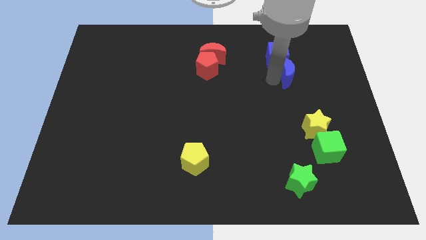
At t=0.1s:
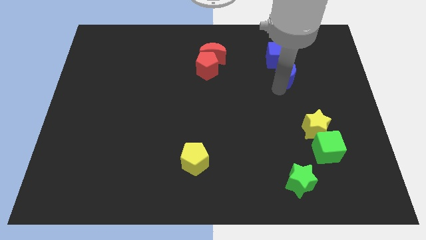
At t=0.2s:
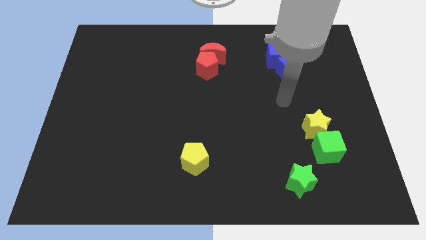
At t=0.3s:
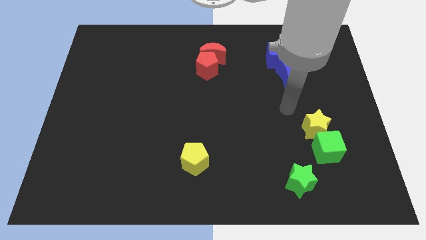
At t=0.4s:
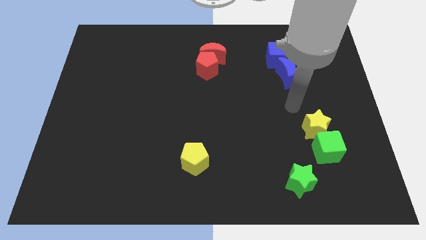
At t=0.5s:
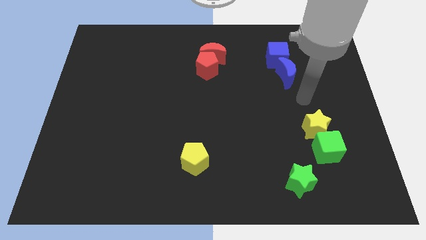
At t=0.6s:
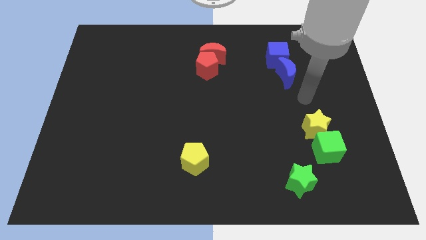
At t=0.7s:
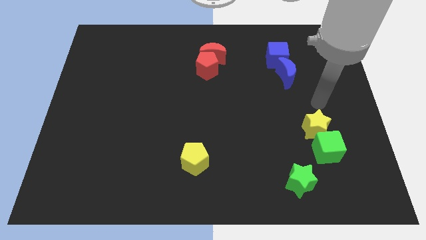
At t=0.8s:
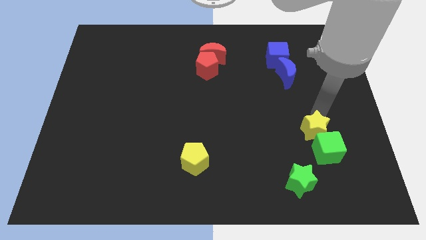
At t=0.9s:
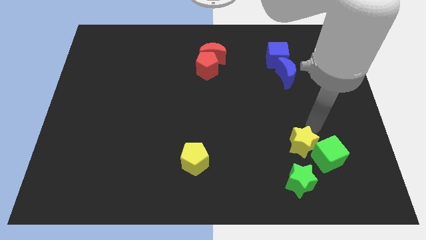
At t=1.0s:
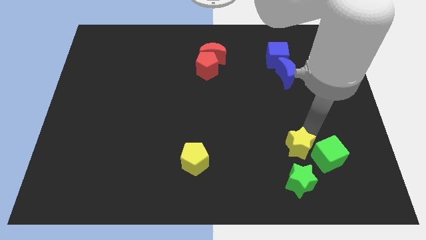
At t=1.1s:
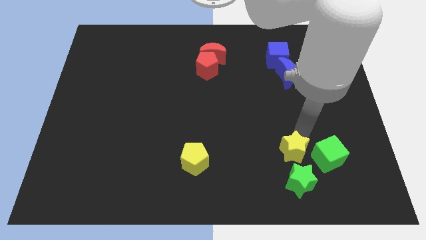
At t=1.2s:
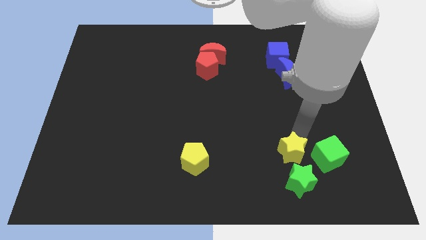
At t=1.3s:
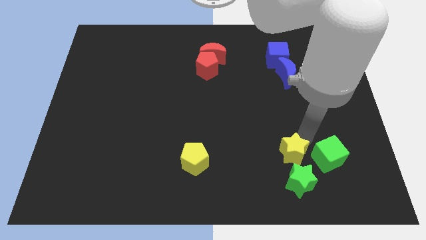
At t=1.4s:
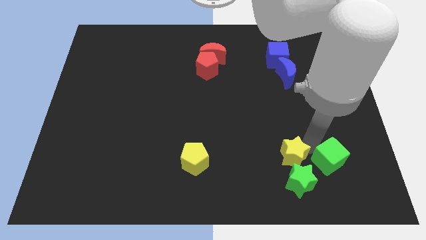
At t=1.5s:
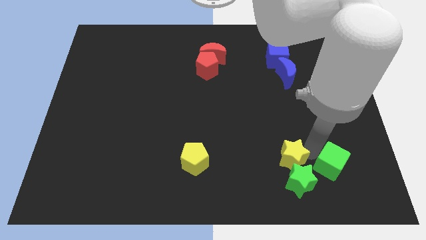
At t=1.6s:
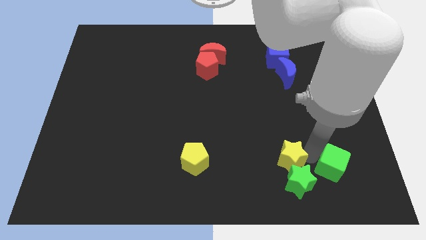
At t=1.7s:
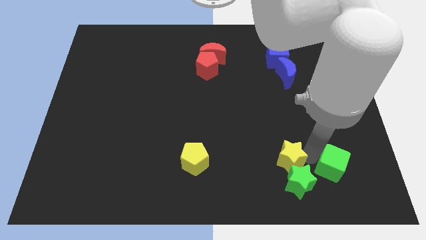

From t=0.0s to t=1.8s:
move the yellow star into the top side of the green star

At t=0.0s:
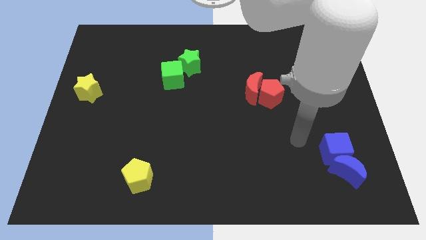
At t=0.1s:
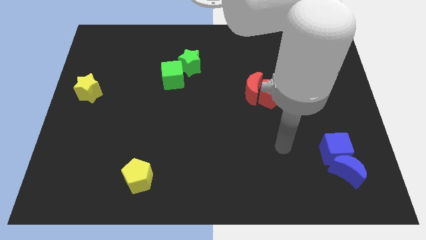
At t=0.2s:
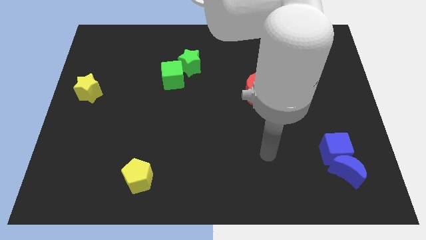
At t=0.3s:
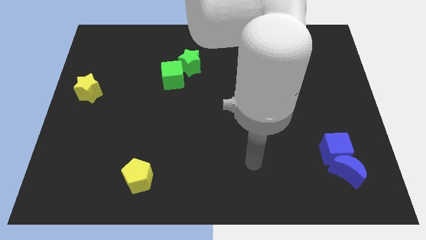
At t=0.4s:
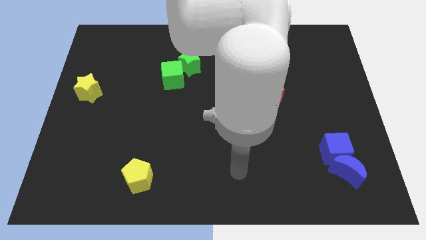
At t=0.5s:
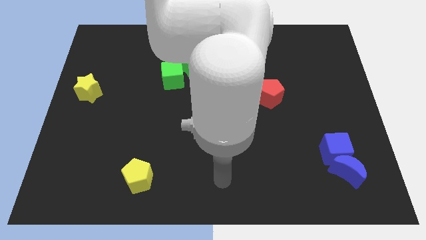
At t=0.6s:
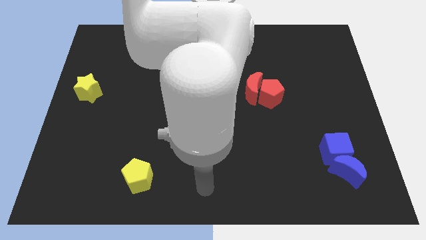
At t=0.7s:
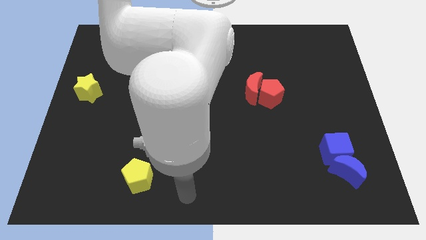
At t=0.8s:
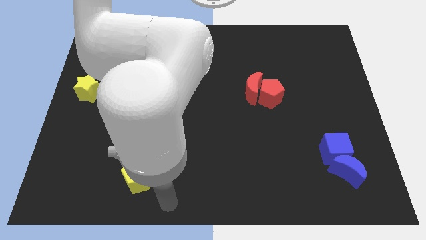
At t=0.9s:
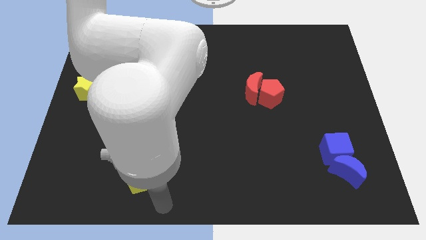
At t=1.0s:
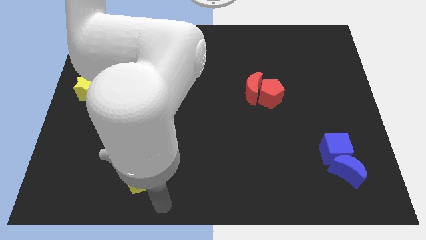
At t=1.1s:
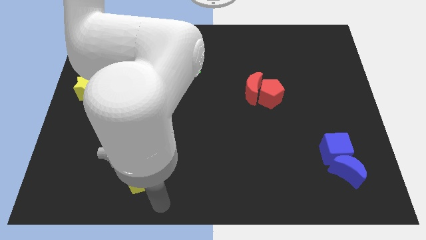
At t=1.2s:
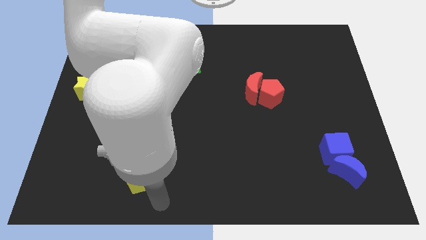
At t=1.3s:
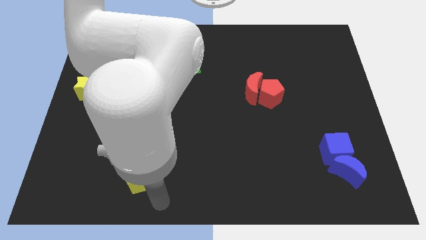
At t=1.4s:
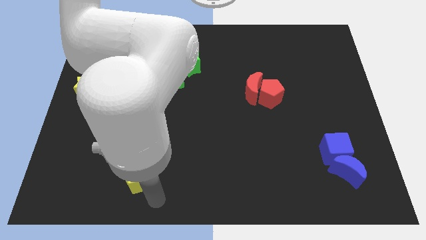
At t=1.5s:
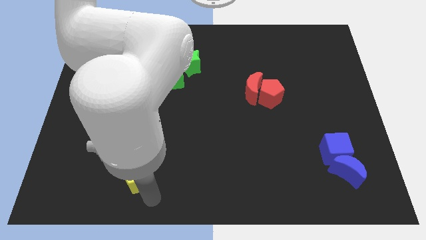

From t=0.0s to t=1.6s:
point your arm at the bottom of the yellow pentagon

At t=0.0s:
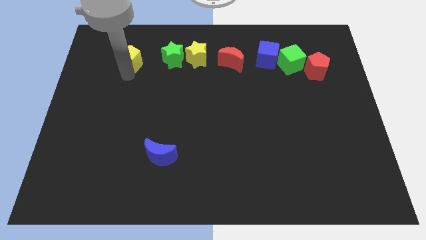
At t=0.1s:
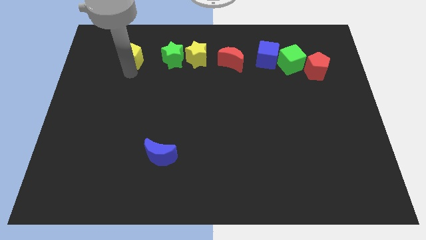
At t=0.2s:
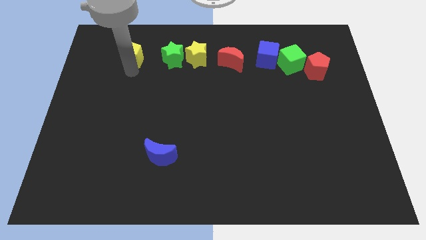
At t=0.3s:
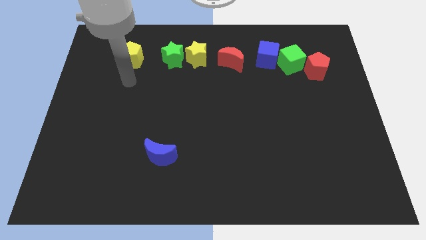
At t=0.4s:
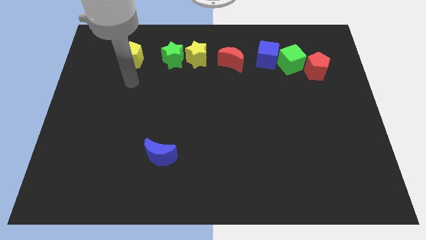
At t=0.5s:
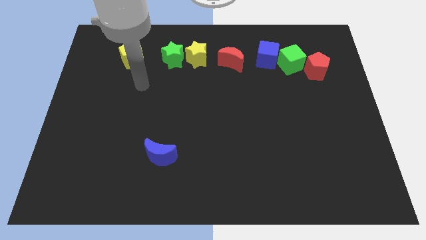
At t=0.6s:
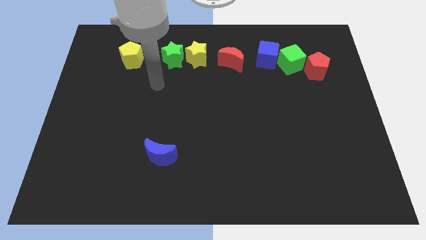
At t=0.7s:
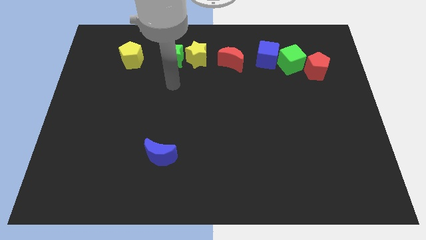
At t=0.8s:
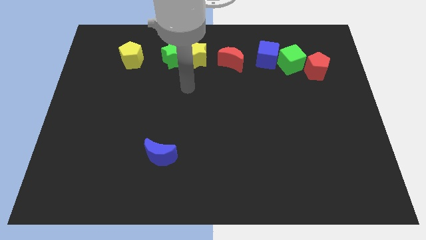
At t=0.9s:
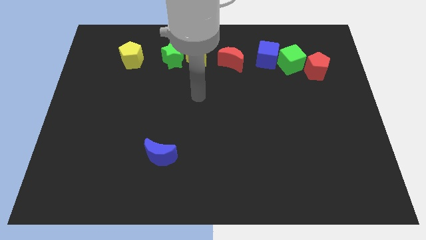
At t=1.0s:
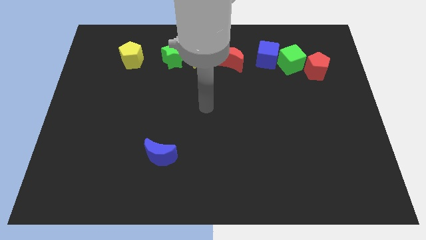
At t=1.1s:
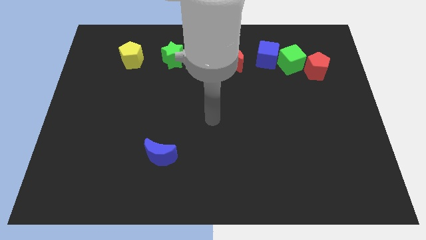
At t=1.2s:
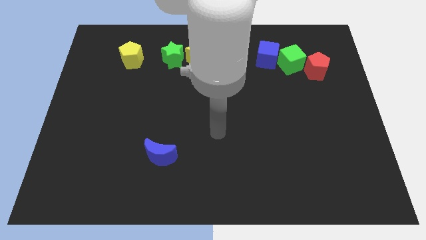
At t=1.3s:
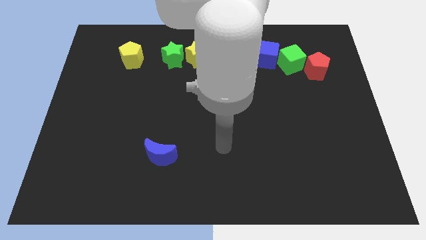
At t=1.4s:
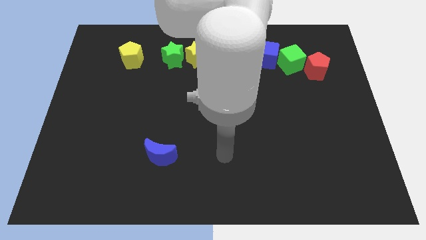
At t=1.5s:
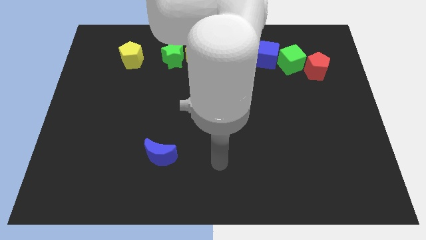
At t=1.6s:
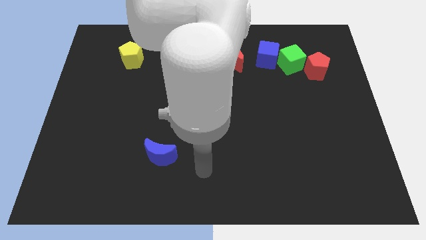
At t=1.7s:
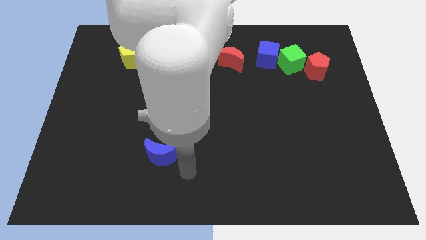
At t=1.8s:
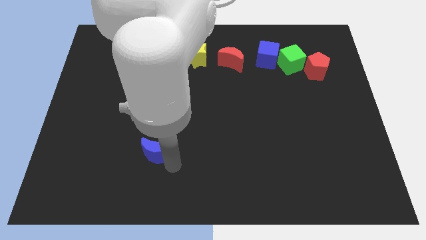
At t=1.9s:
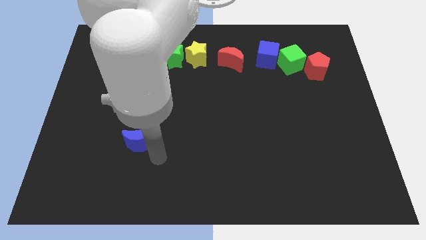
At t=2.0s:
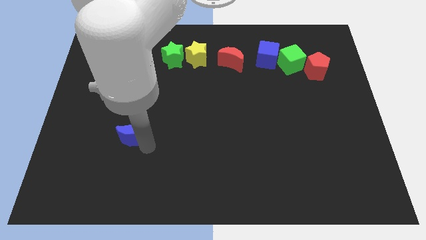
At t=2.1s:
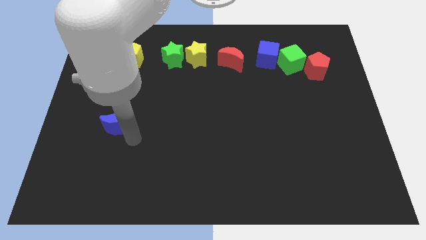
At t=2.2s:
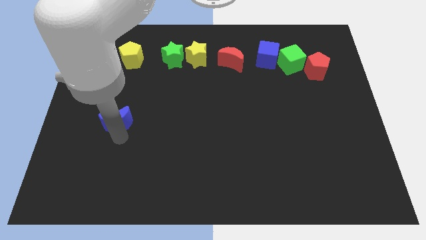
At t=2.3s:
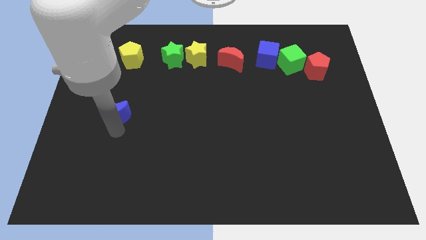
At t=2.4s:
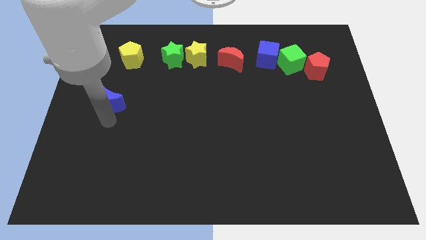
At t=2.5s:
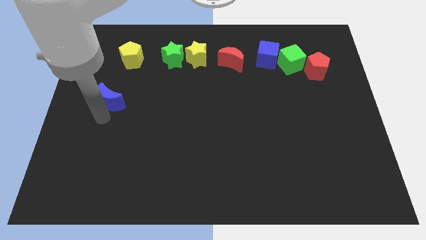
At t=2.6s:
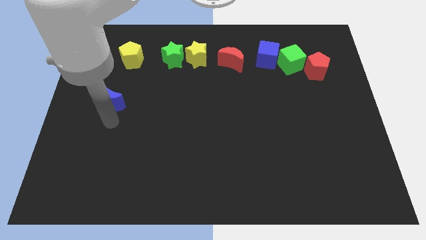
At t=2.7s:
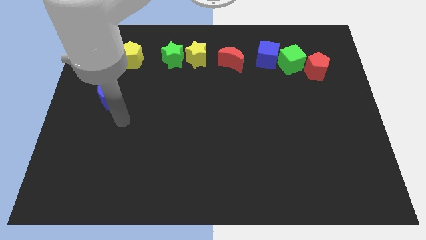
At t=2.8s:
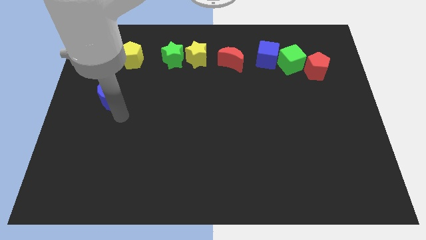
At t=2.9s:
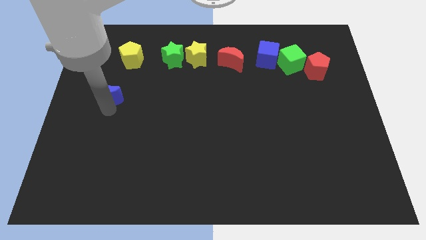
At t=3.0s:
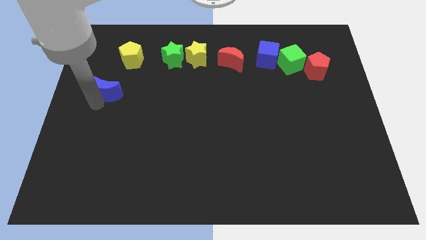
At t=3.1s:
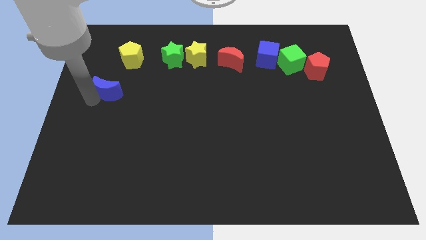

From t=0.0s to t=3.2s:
move the blue moon diagonally to the bottom left of the yellow pentagon

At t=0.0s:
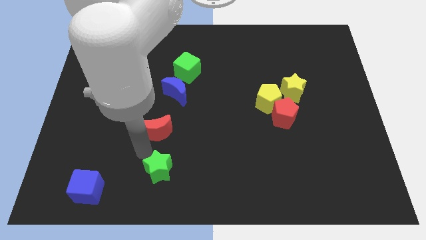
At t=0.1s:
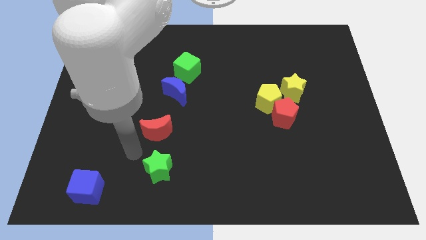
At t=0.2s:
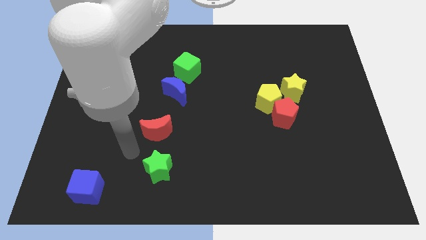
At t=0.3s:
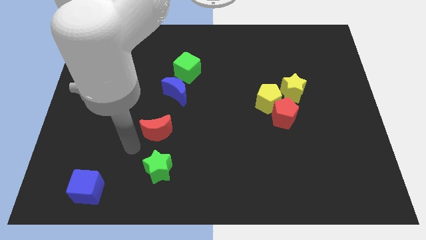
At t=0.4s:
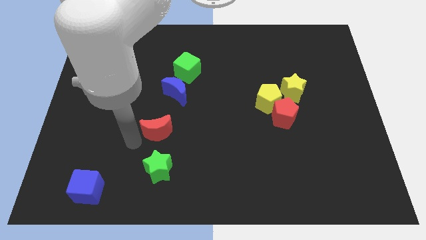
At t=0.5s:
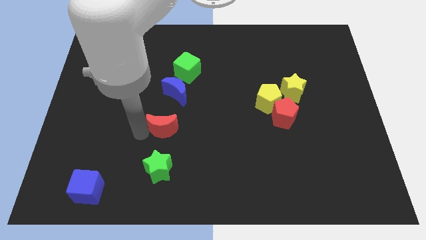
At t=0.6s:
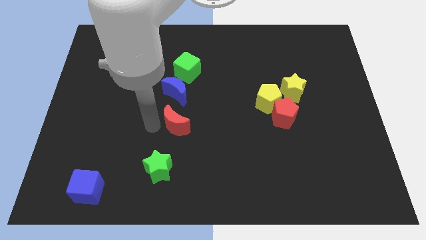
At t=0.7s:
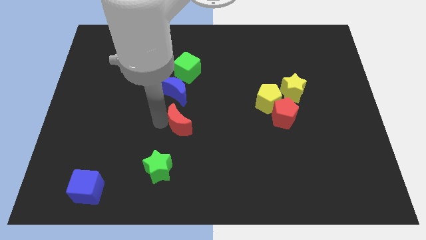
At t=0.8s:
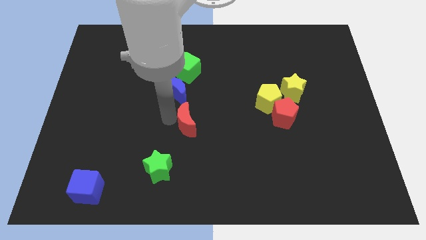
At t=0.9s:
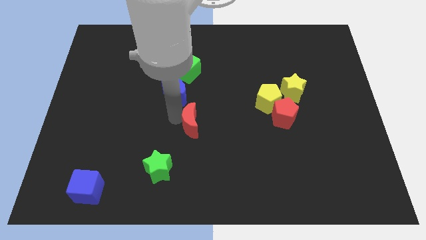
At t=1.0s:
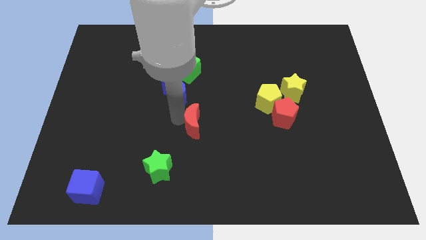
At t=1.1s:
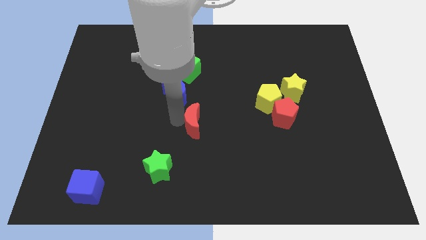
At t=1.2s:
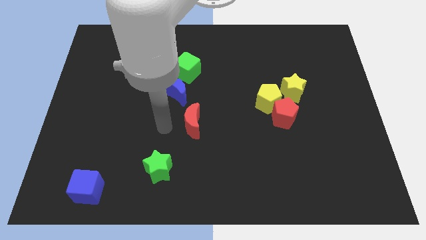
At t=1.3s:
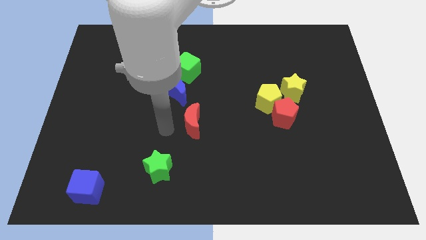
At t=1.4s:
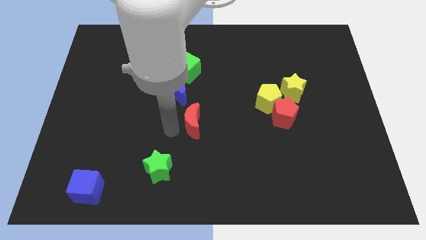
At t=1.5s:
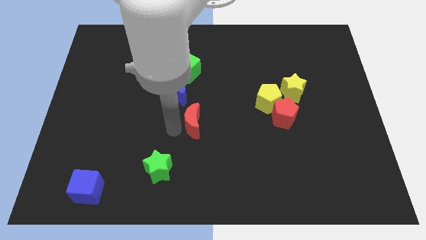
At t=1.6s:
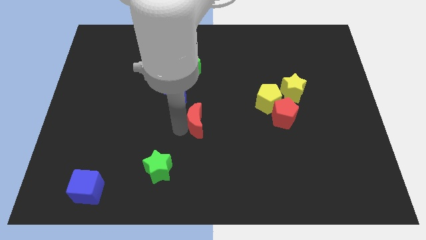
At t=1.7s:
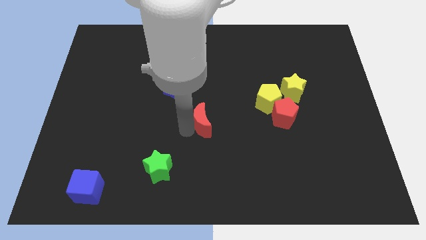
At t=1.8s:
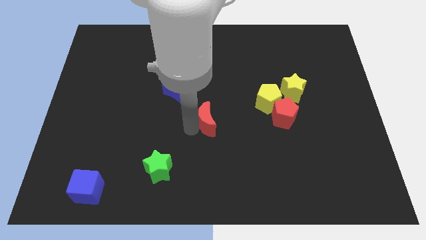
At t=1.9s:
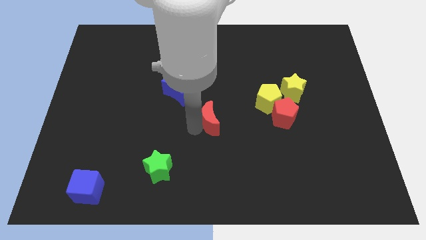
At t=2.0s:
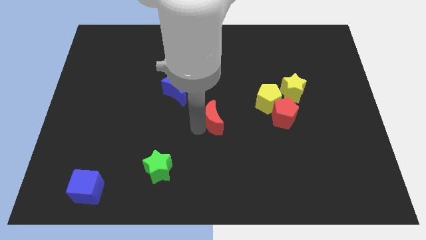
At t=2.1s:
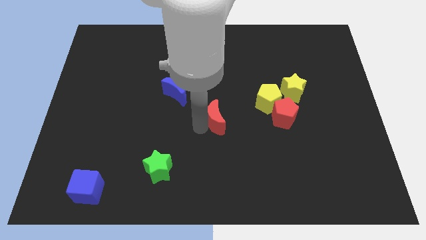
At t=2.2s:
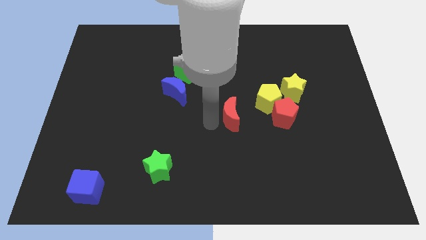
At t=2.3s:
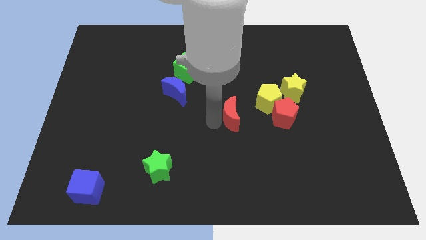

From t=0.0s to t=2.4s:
place the red crescent to the left of the red pentagon
